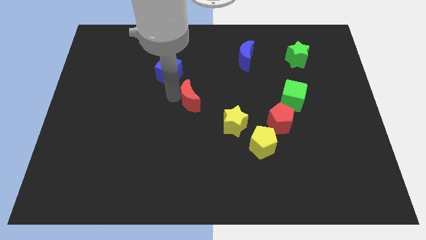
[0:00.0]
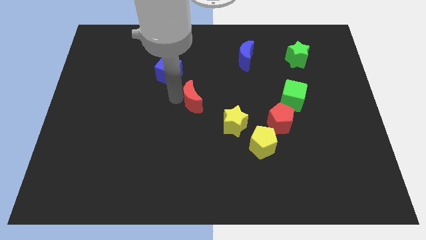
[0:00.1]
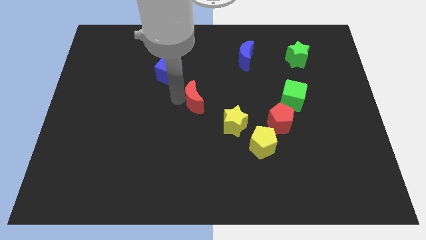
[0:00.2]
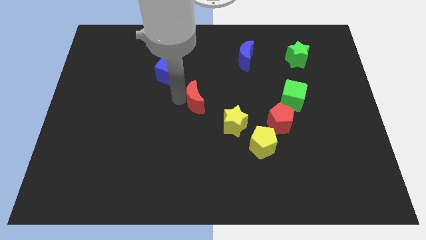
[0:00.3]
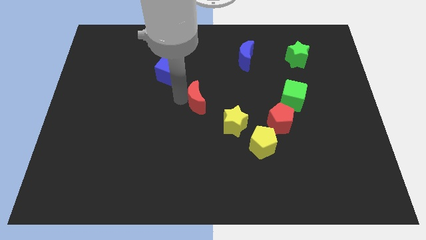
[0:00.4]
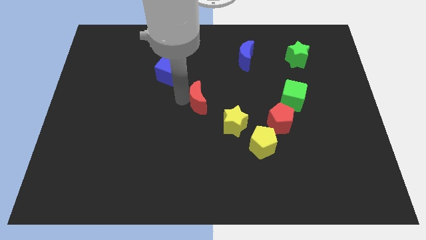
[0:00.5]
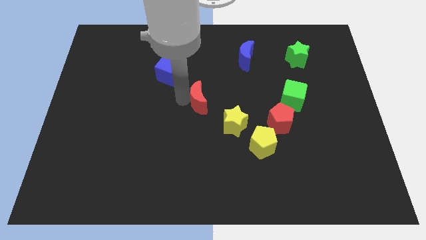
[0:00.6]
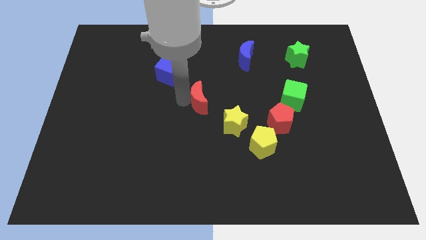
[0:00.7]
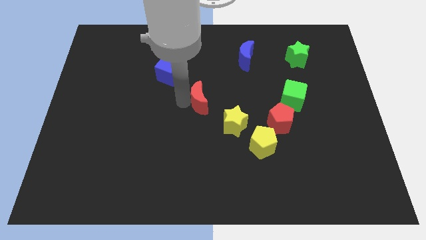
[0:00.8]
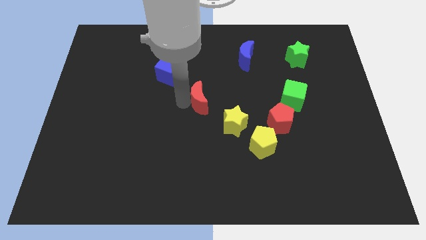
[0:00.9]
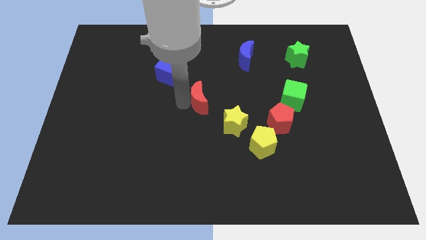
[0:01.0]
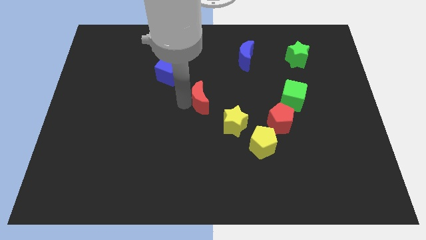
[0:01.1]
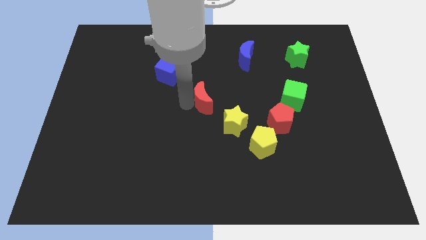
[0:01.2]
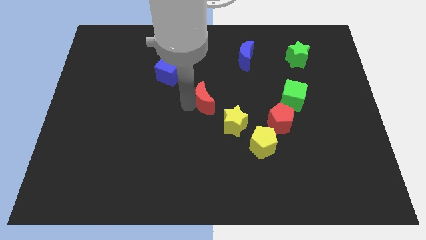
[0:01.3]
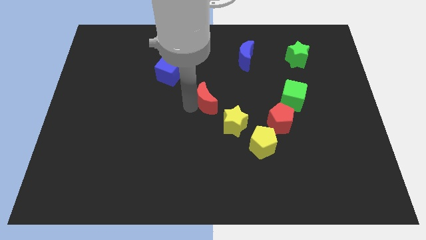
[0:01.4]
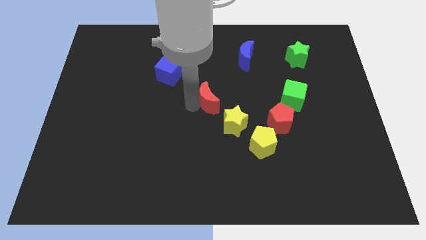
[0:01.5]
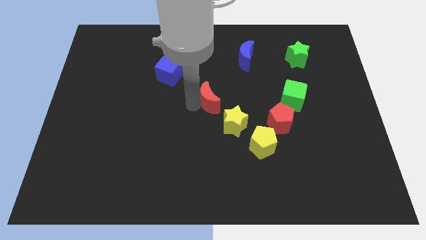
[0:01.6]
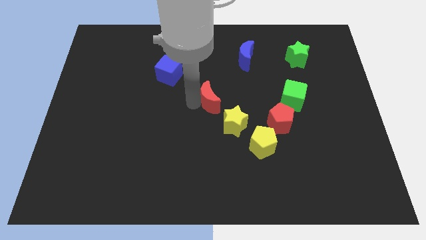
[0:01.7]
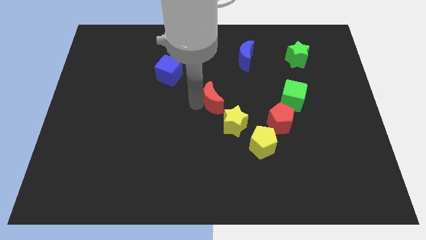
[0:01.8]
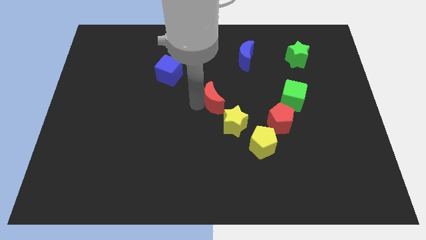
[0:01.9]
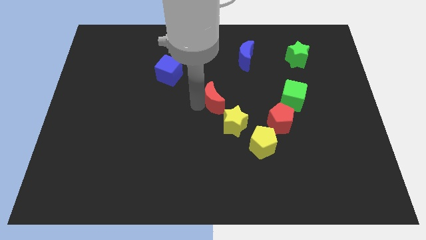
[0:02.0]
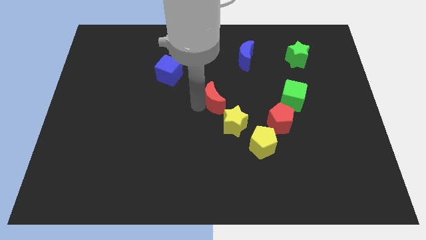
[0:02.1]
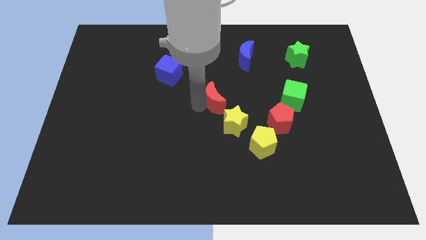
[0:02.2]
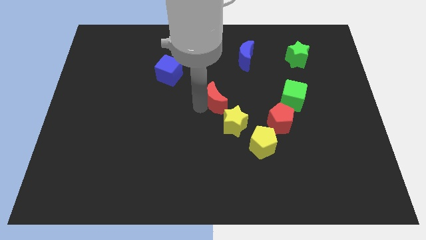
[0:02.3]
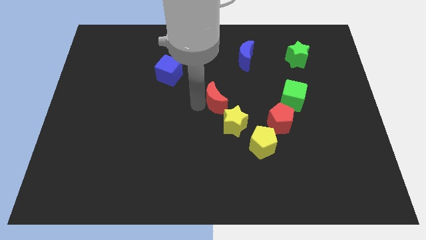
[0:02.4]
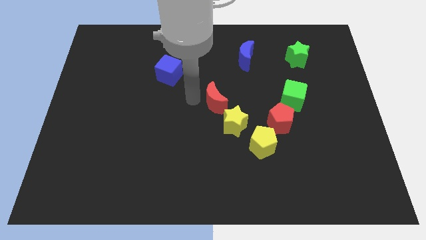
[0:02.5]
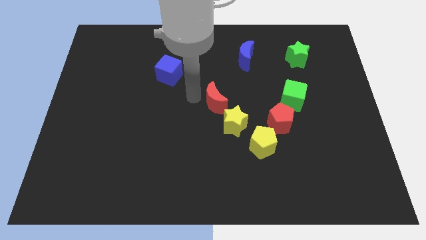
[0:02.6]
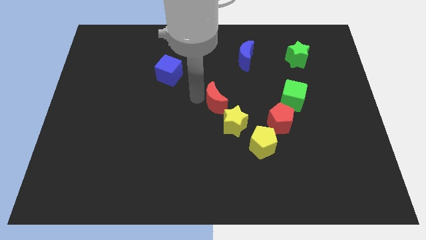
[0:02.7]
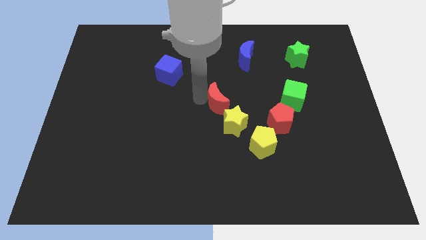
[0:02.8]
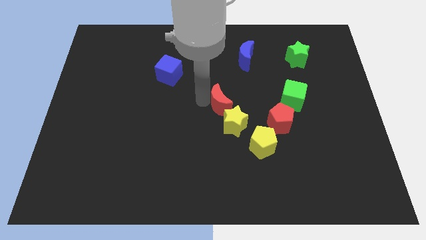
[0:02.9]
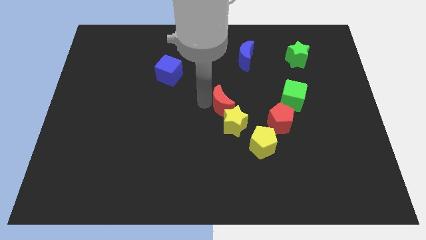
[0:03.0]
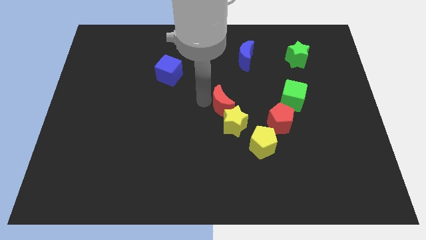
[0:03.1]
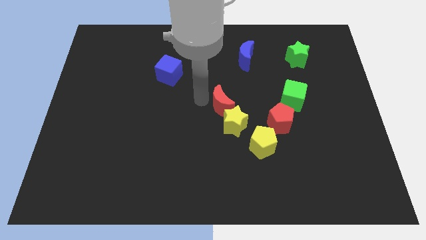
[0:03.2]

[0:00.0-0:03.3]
place the red moon at the top left of the yellow star

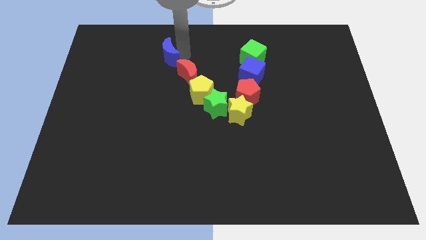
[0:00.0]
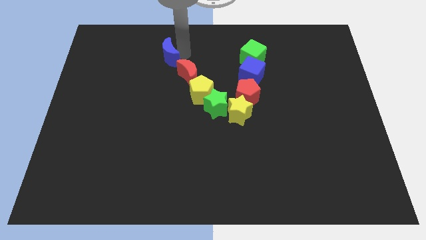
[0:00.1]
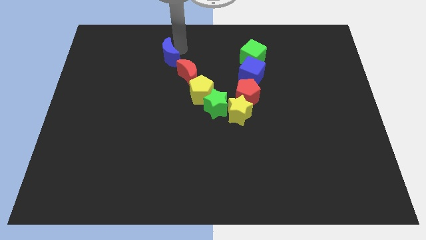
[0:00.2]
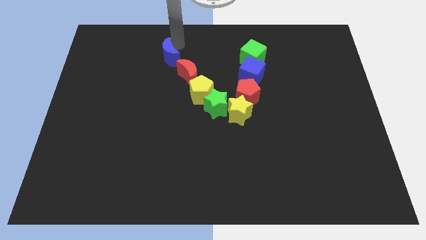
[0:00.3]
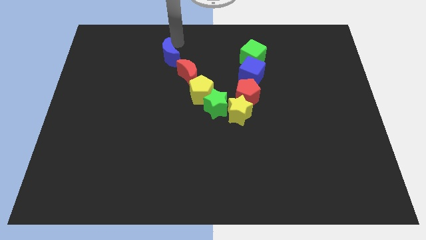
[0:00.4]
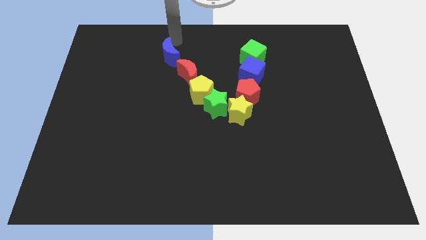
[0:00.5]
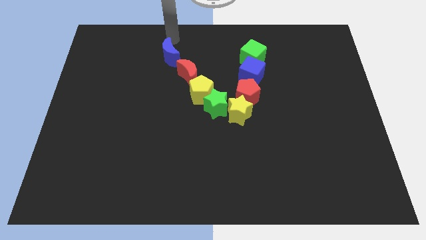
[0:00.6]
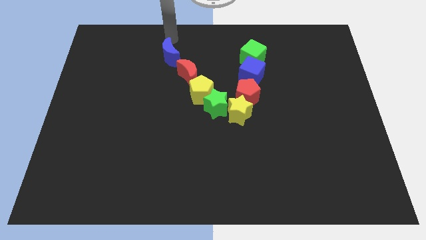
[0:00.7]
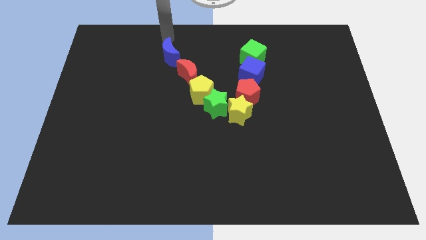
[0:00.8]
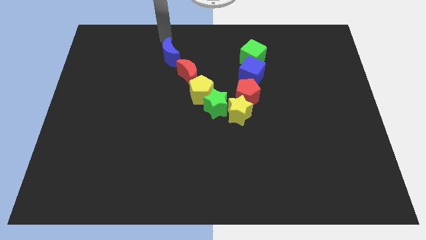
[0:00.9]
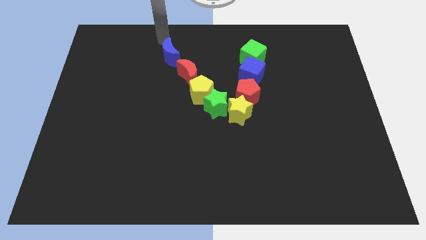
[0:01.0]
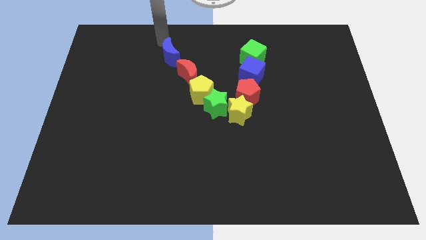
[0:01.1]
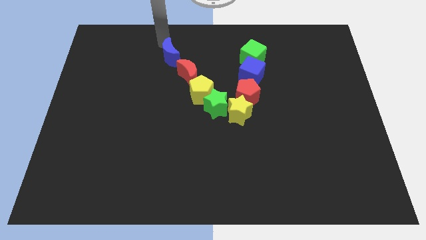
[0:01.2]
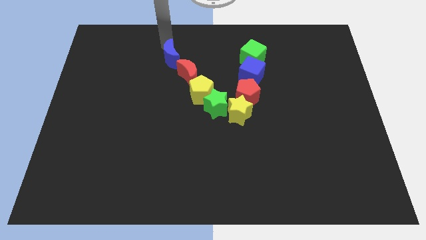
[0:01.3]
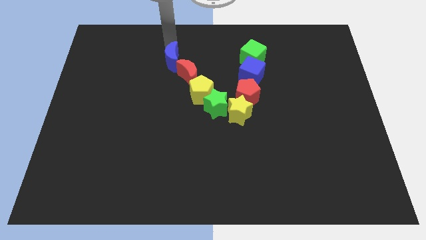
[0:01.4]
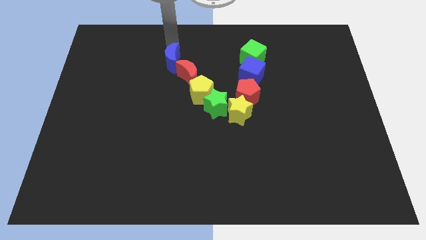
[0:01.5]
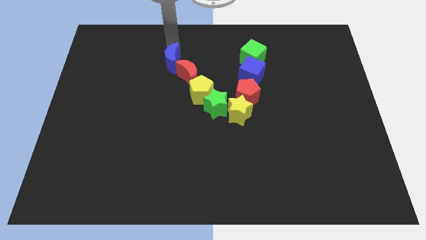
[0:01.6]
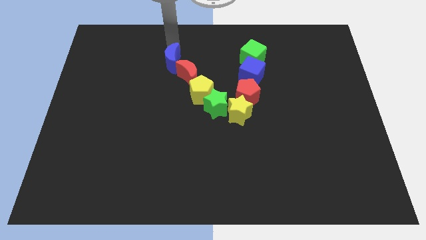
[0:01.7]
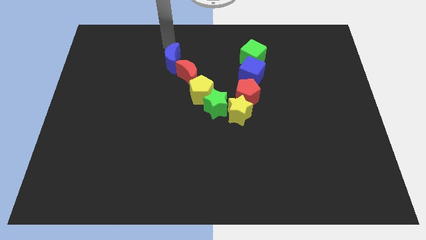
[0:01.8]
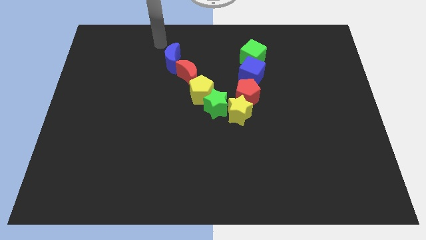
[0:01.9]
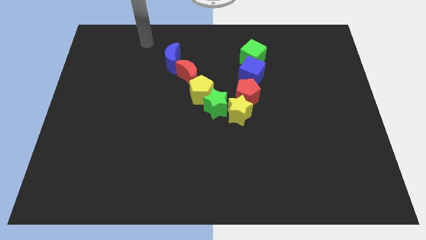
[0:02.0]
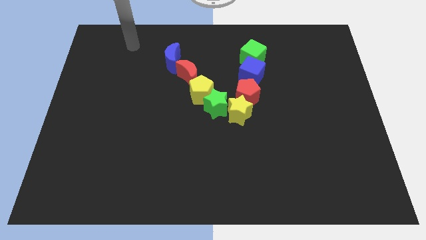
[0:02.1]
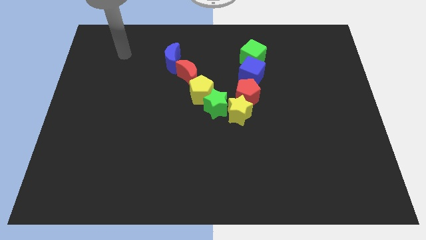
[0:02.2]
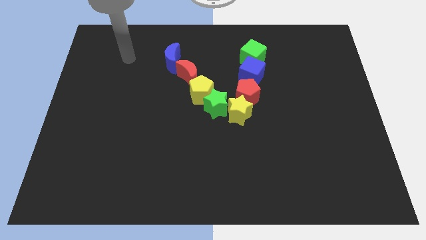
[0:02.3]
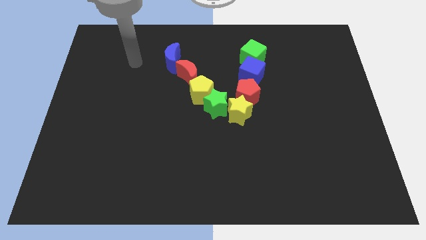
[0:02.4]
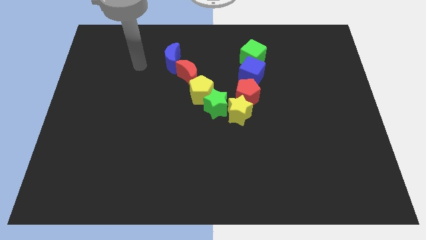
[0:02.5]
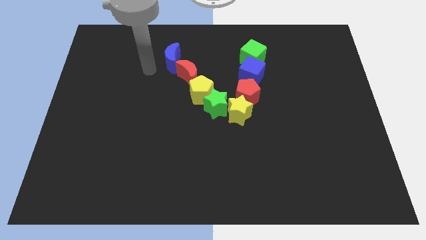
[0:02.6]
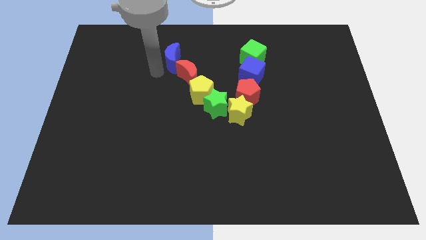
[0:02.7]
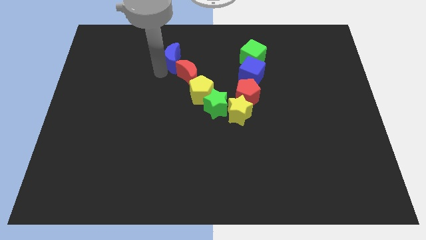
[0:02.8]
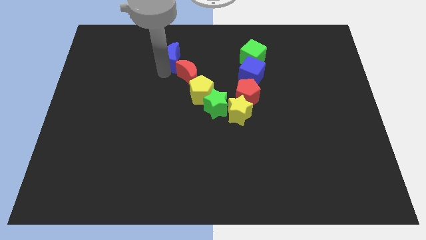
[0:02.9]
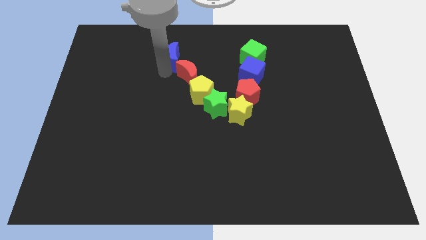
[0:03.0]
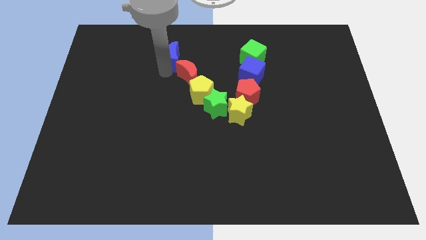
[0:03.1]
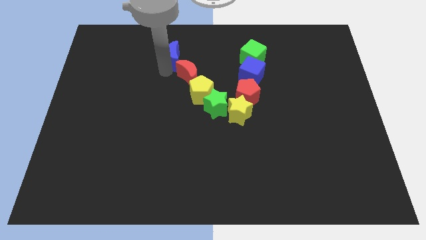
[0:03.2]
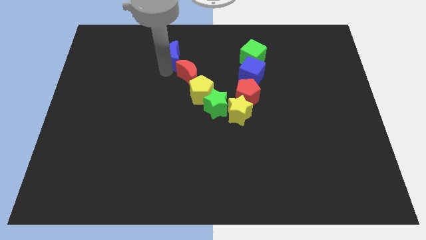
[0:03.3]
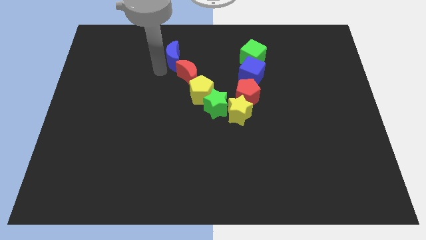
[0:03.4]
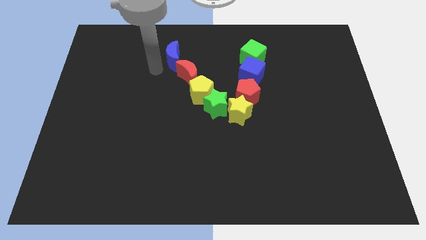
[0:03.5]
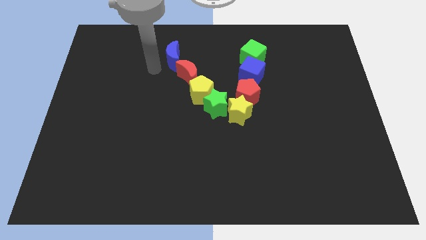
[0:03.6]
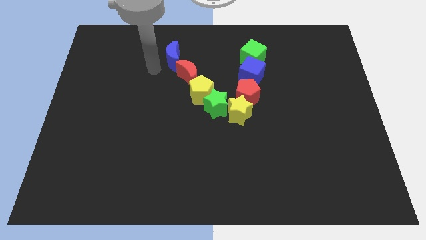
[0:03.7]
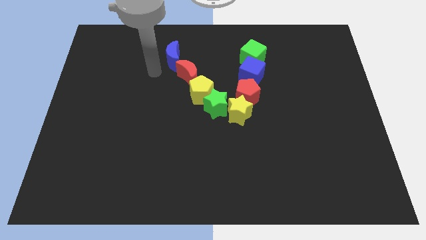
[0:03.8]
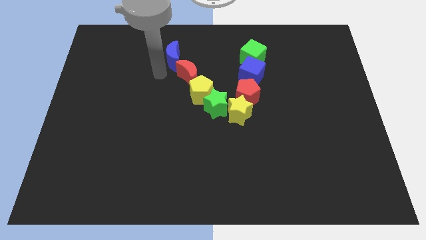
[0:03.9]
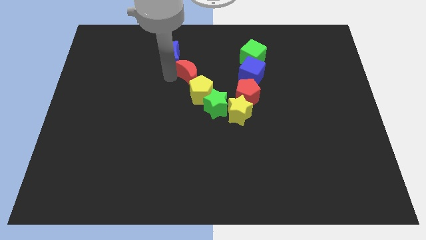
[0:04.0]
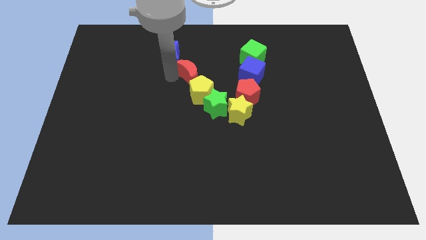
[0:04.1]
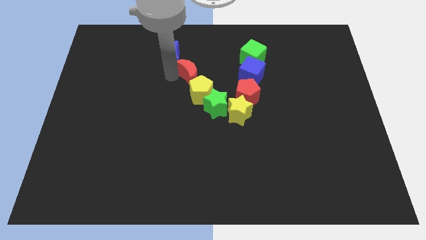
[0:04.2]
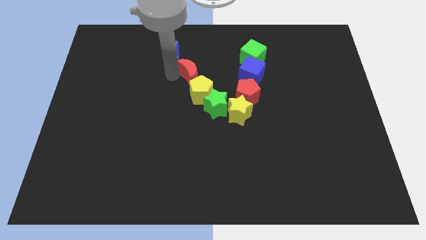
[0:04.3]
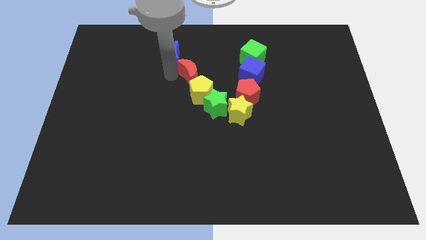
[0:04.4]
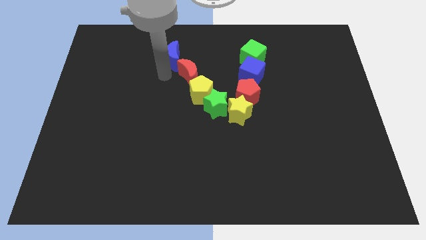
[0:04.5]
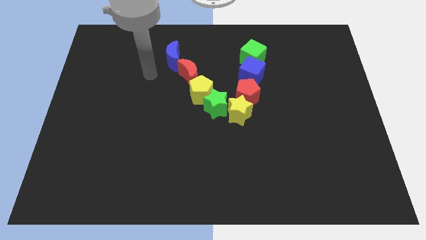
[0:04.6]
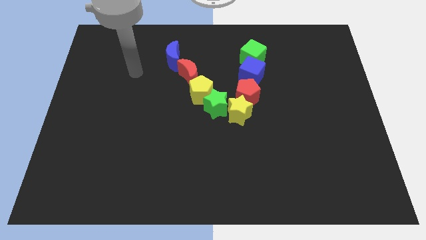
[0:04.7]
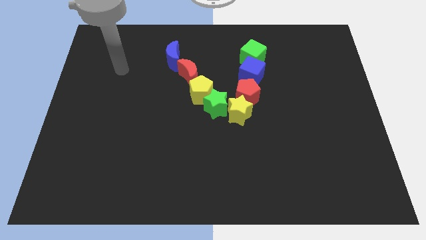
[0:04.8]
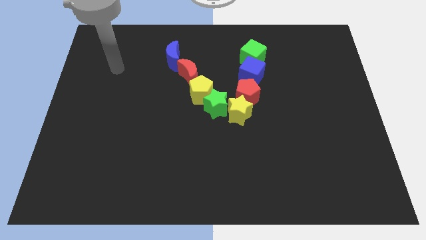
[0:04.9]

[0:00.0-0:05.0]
adjust the blue moon and red moon at the top left side of the yellow pentagon

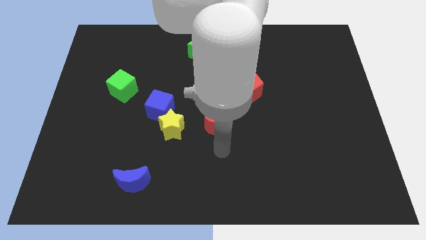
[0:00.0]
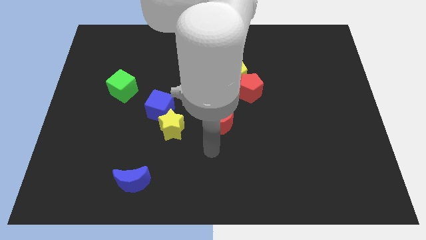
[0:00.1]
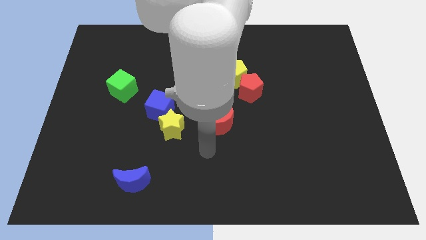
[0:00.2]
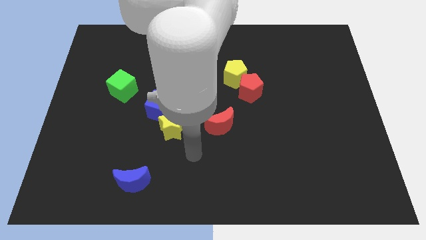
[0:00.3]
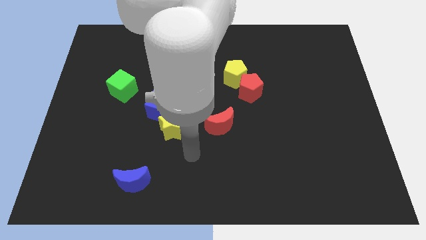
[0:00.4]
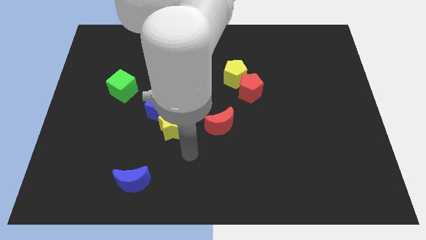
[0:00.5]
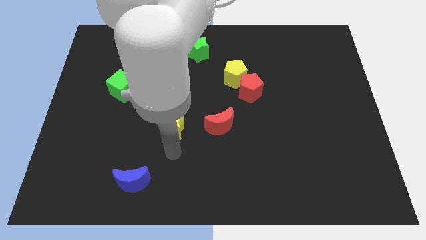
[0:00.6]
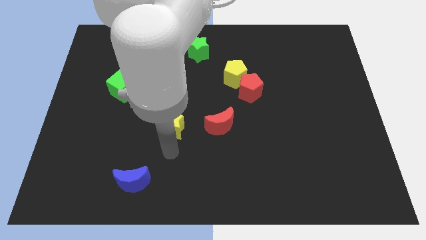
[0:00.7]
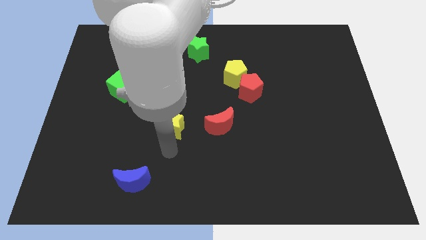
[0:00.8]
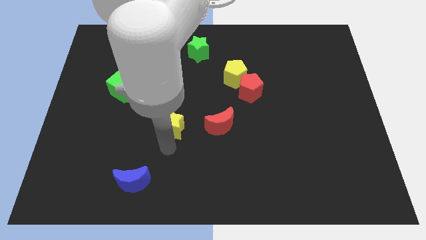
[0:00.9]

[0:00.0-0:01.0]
point your arm at the bottom of yellow star
